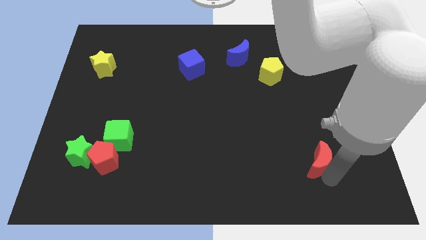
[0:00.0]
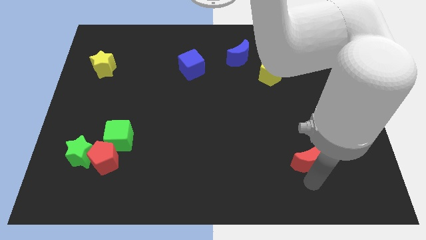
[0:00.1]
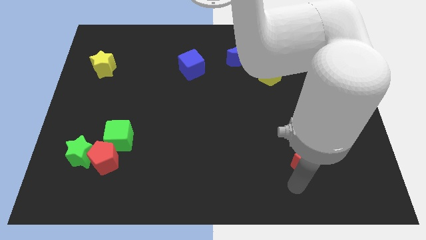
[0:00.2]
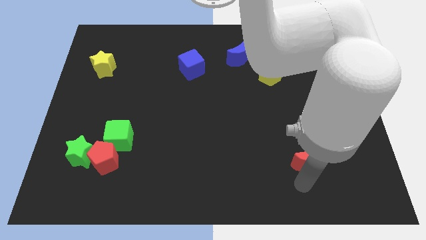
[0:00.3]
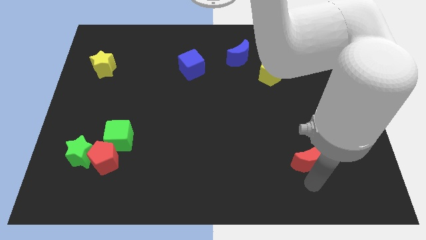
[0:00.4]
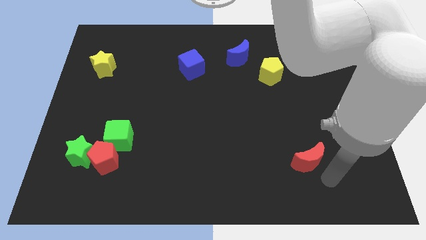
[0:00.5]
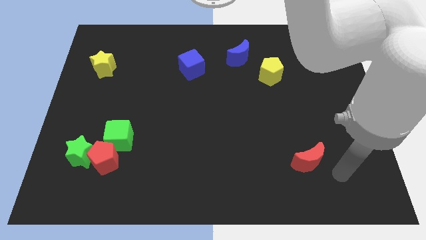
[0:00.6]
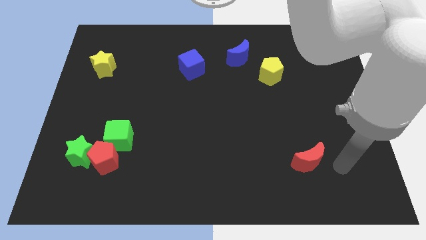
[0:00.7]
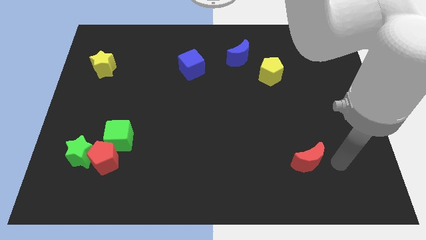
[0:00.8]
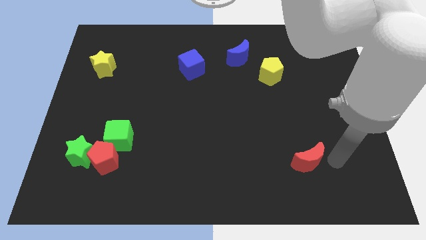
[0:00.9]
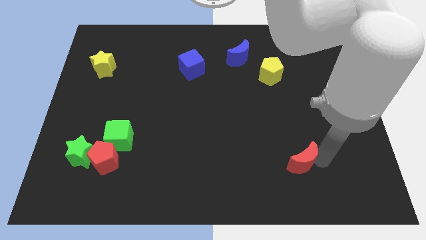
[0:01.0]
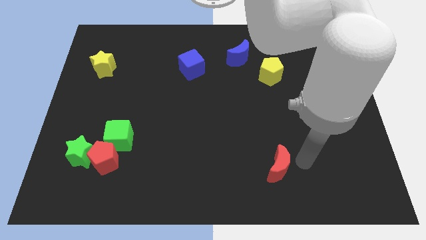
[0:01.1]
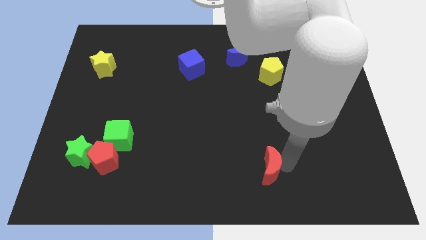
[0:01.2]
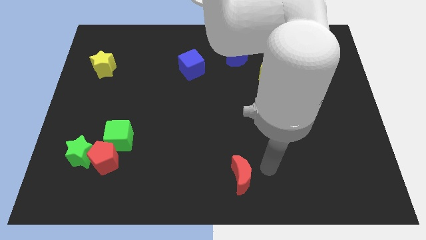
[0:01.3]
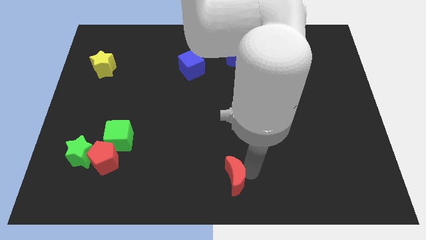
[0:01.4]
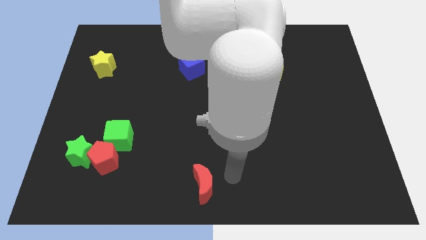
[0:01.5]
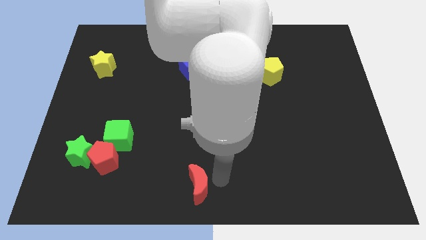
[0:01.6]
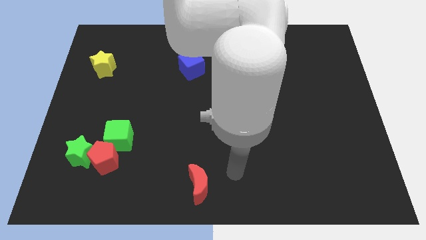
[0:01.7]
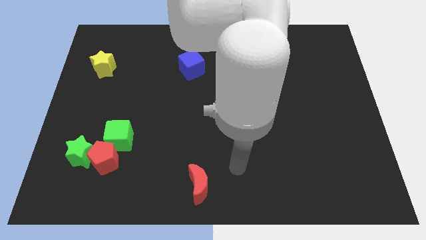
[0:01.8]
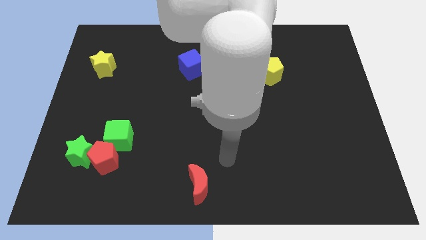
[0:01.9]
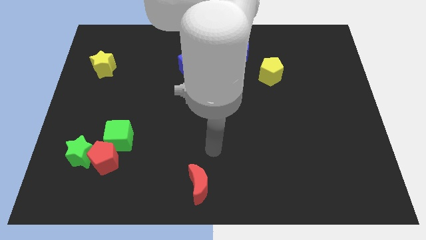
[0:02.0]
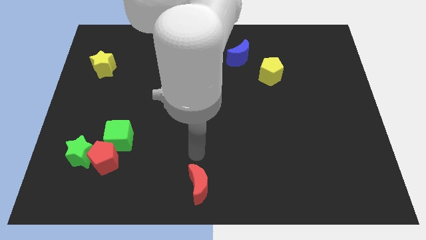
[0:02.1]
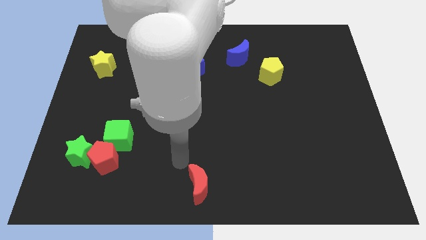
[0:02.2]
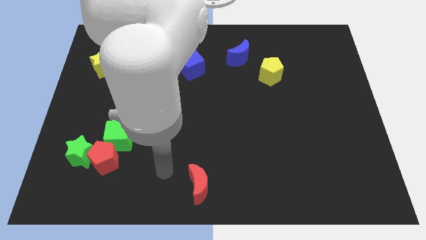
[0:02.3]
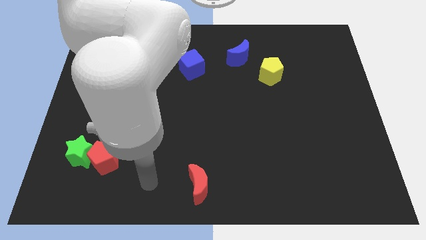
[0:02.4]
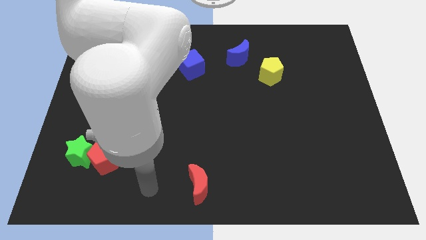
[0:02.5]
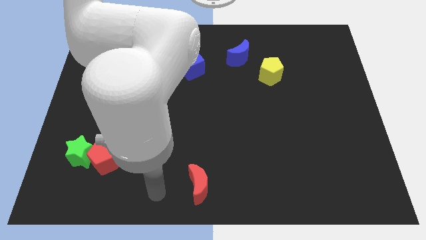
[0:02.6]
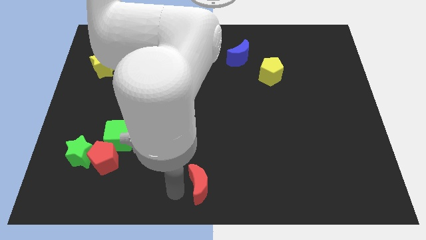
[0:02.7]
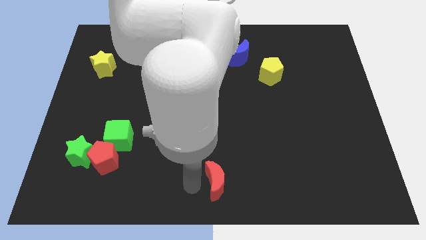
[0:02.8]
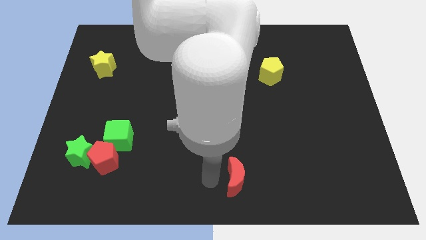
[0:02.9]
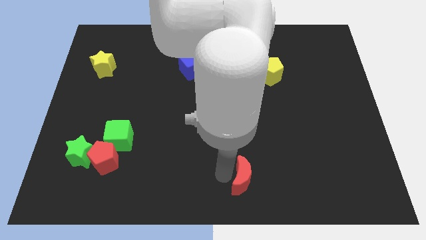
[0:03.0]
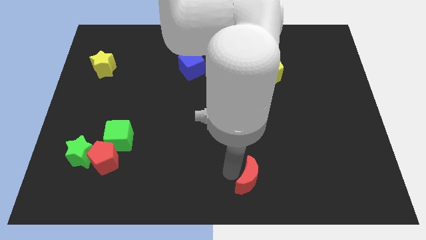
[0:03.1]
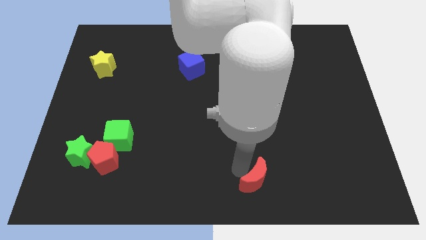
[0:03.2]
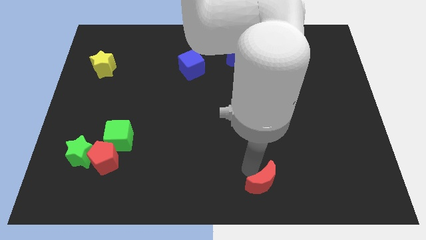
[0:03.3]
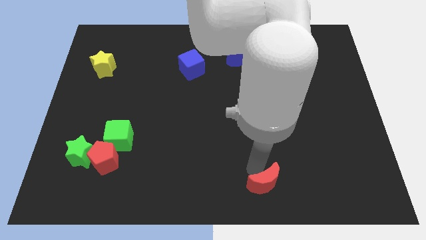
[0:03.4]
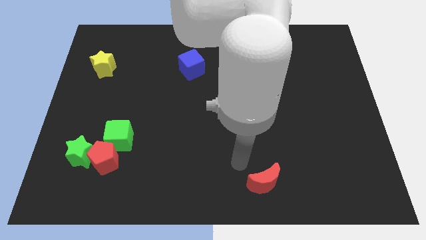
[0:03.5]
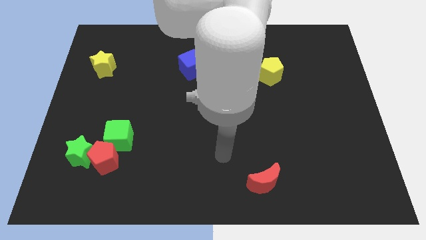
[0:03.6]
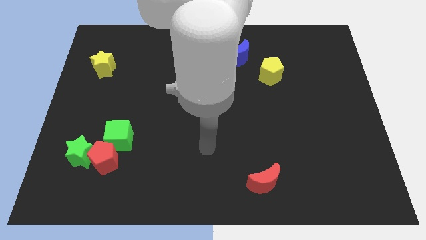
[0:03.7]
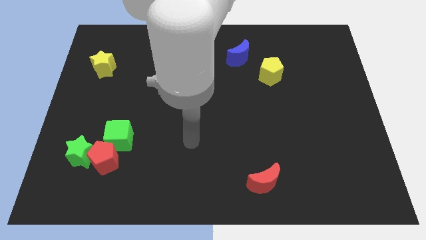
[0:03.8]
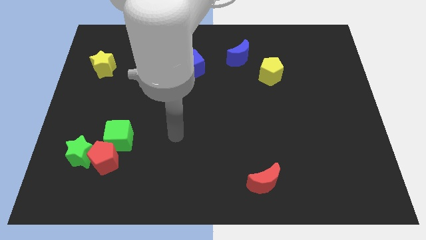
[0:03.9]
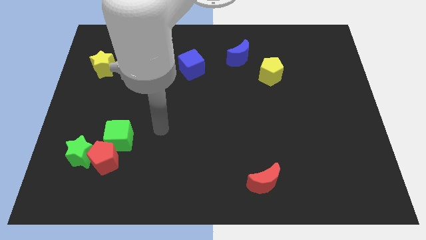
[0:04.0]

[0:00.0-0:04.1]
place the red moon to the bottom center

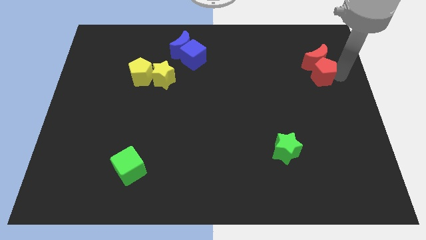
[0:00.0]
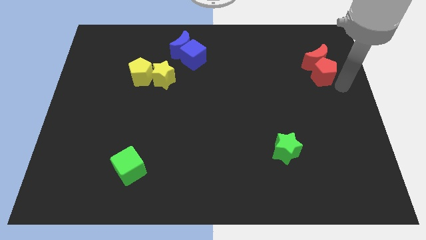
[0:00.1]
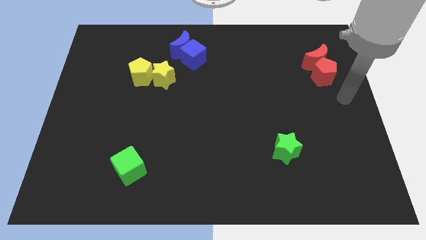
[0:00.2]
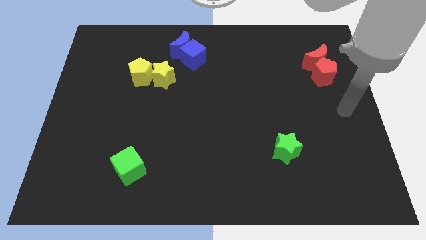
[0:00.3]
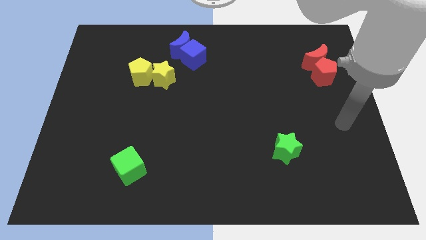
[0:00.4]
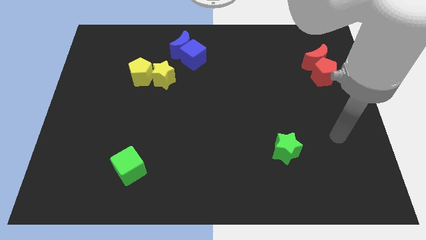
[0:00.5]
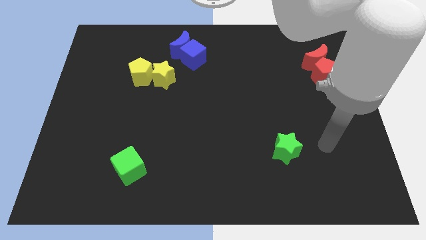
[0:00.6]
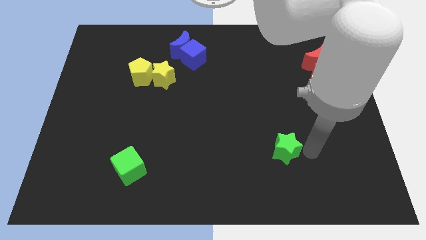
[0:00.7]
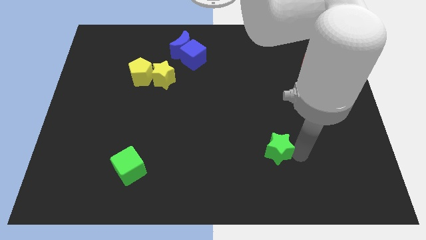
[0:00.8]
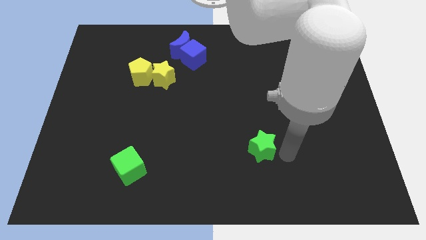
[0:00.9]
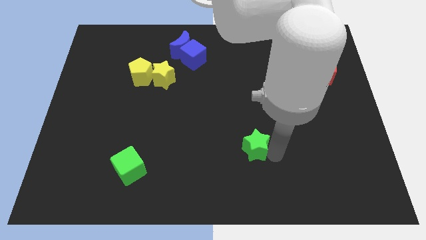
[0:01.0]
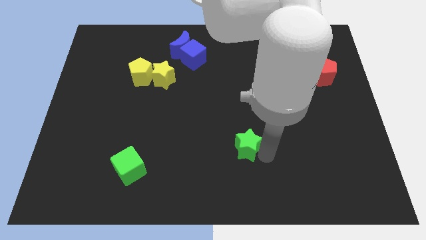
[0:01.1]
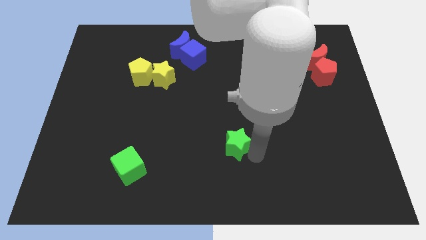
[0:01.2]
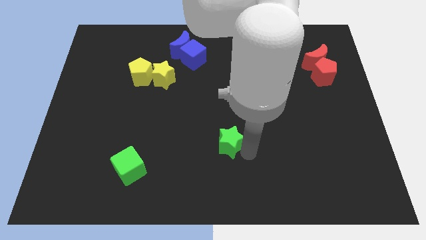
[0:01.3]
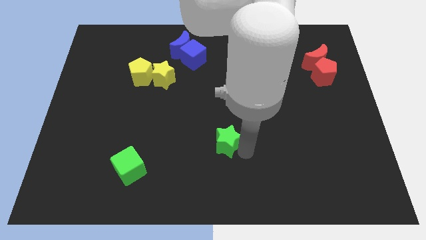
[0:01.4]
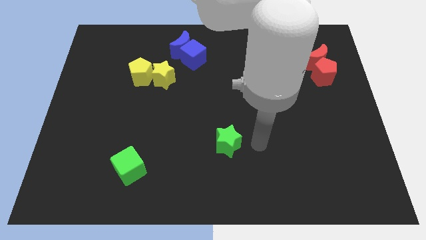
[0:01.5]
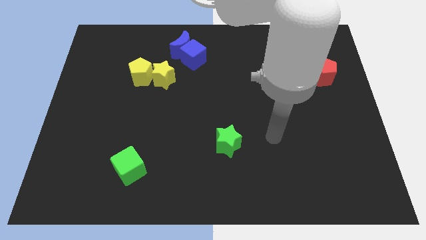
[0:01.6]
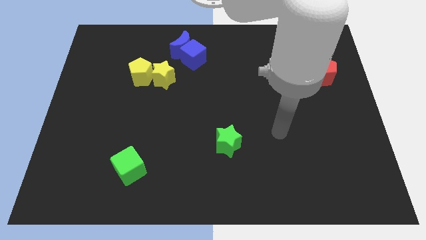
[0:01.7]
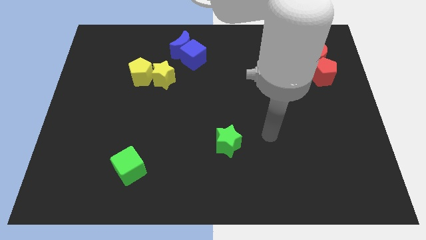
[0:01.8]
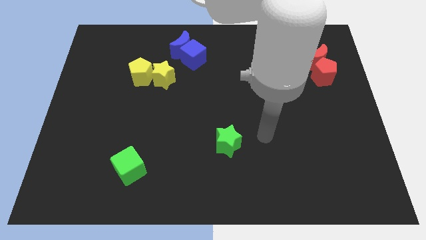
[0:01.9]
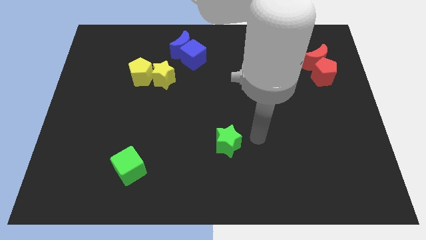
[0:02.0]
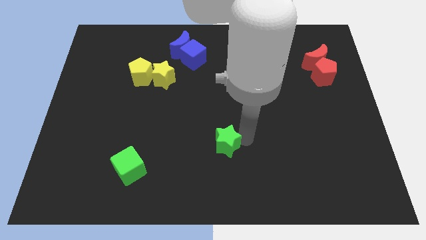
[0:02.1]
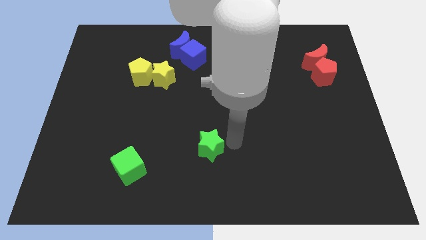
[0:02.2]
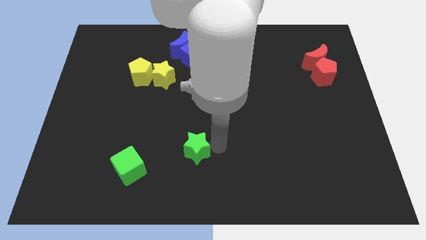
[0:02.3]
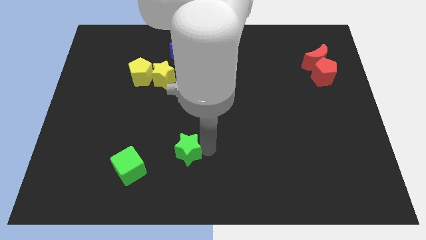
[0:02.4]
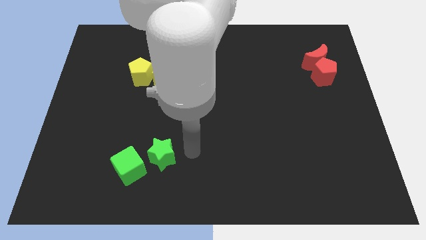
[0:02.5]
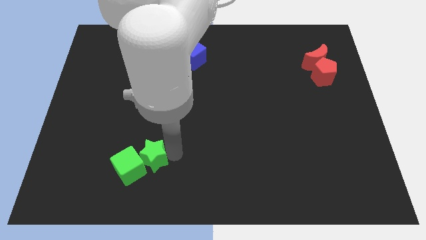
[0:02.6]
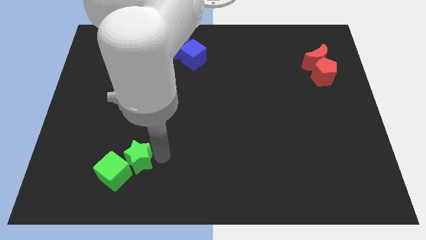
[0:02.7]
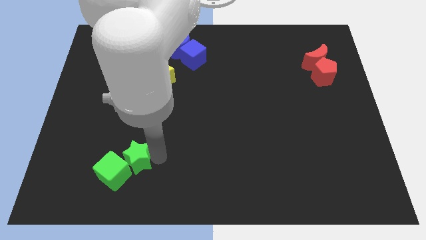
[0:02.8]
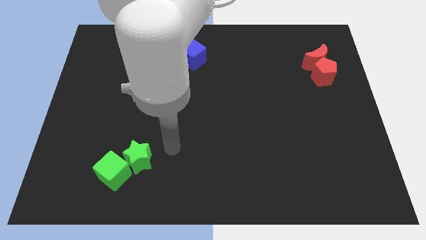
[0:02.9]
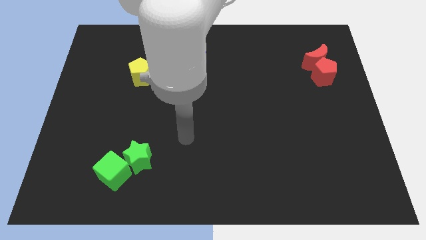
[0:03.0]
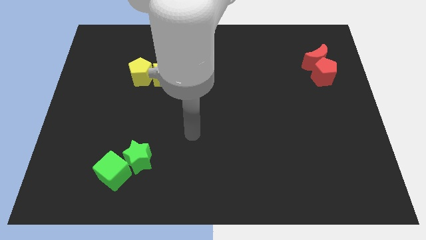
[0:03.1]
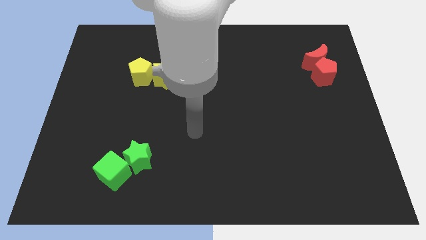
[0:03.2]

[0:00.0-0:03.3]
move the green star into the green cube

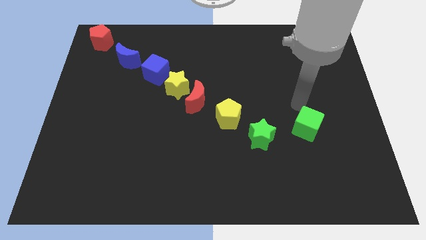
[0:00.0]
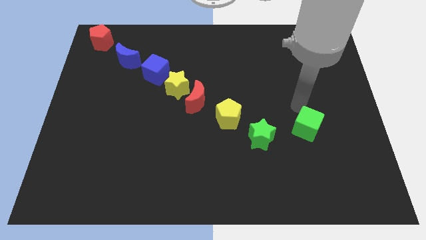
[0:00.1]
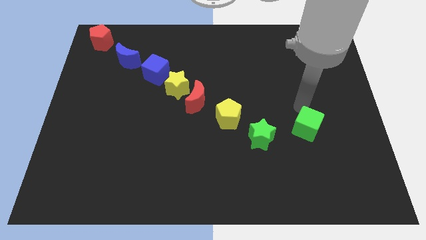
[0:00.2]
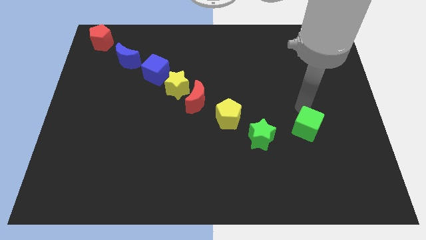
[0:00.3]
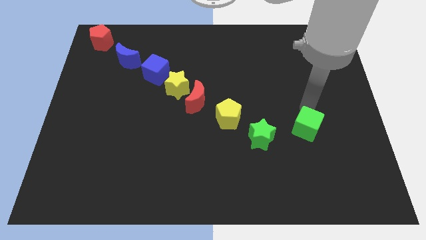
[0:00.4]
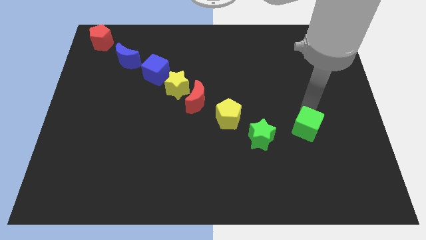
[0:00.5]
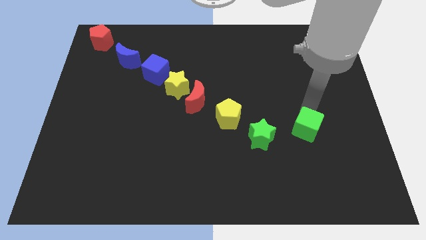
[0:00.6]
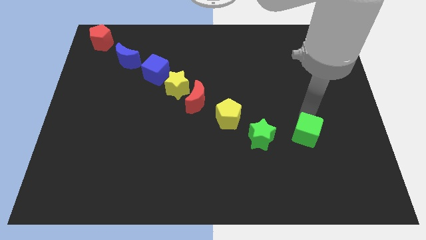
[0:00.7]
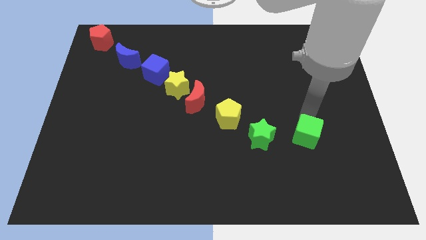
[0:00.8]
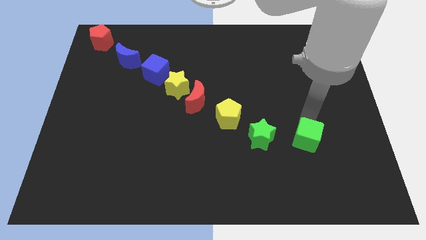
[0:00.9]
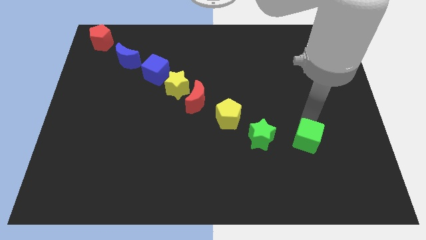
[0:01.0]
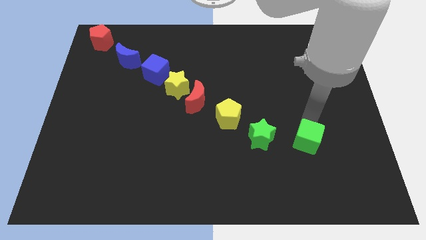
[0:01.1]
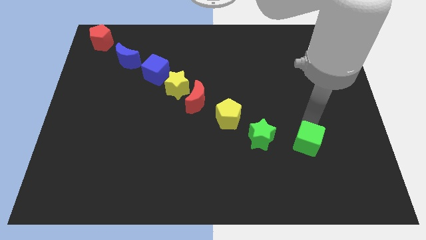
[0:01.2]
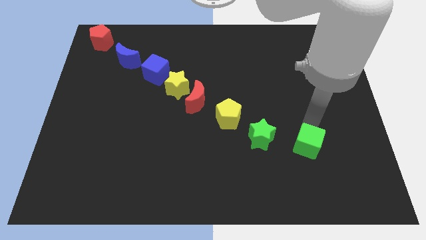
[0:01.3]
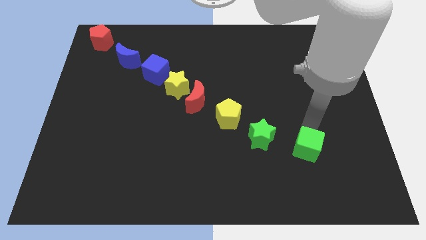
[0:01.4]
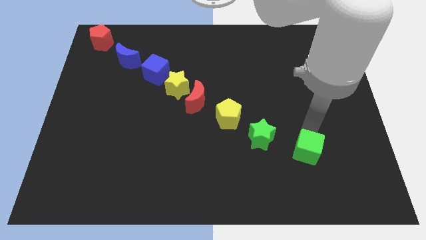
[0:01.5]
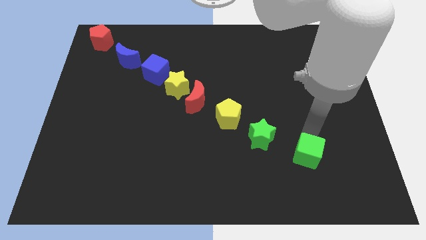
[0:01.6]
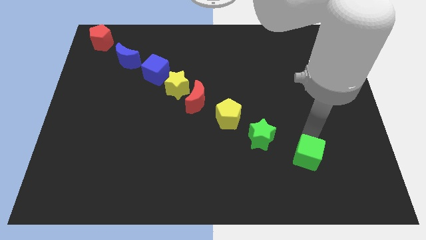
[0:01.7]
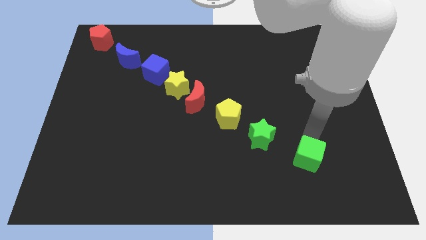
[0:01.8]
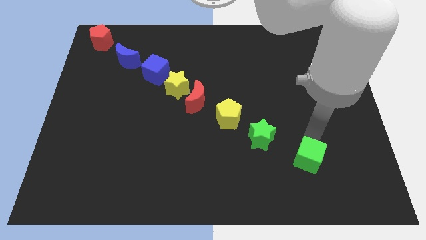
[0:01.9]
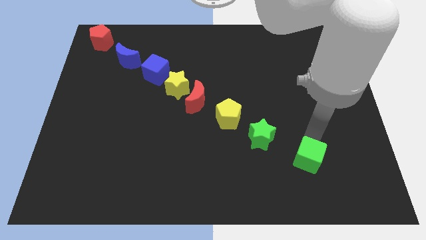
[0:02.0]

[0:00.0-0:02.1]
move the green cube down slightly
